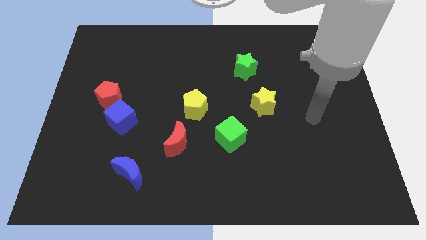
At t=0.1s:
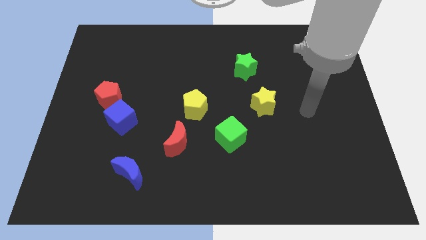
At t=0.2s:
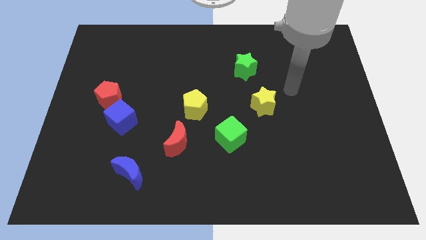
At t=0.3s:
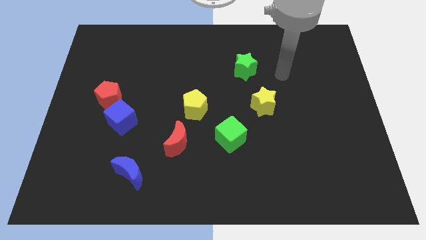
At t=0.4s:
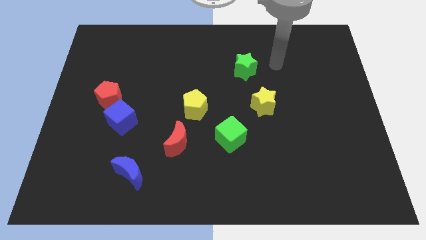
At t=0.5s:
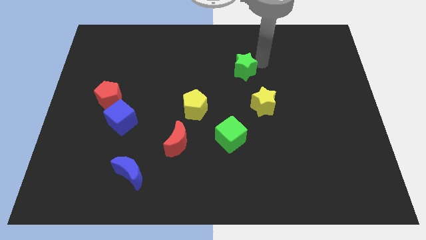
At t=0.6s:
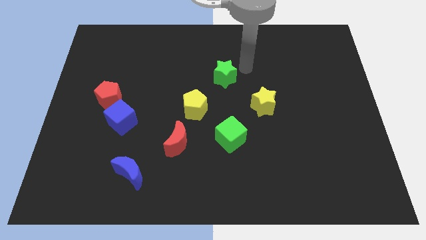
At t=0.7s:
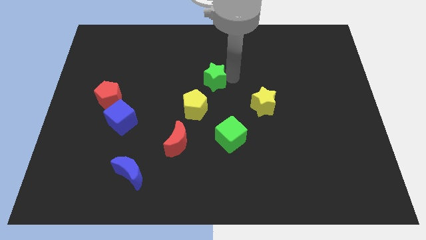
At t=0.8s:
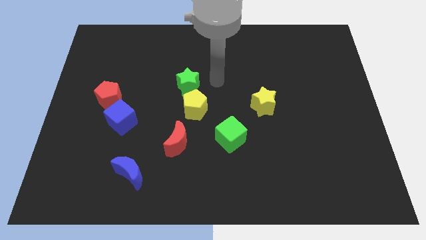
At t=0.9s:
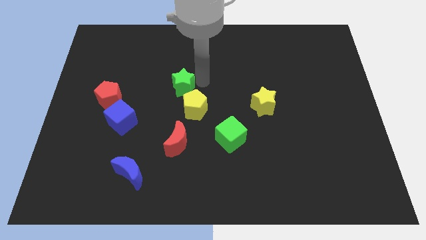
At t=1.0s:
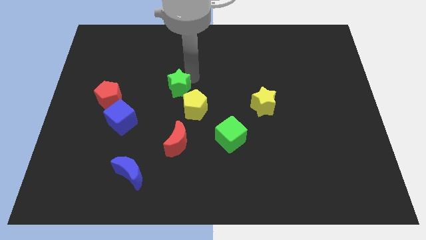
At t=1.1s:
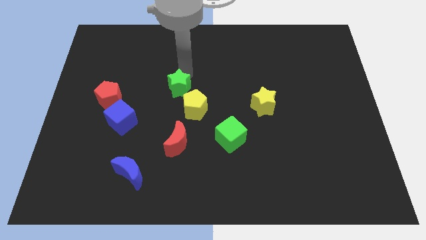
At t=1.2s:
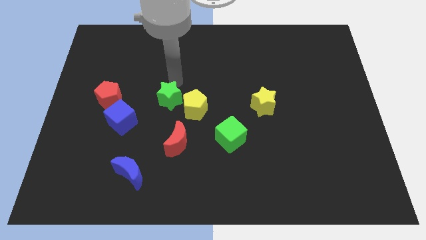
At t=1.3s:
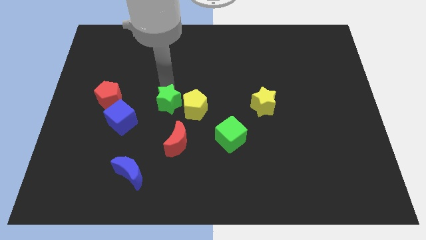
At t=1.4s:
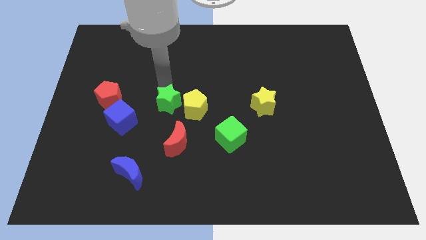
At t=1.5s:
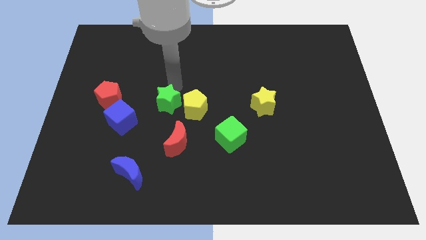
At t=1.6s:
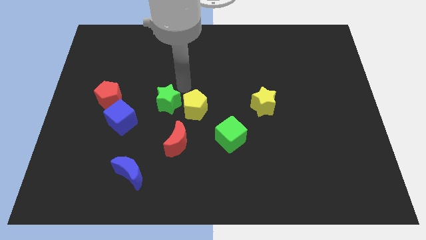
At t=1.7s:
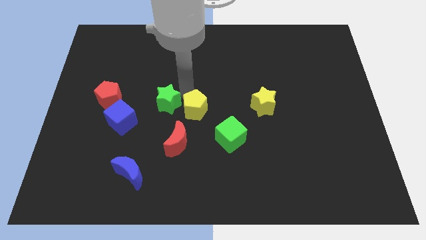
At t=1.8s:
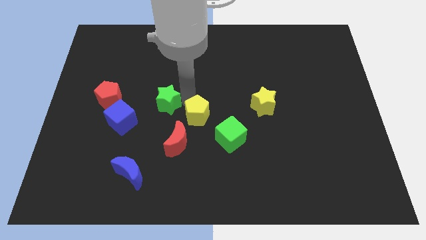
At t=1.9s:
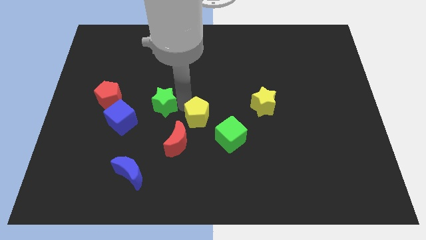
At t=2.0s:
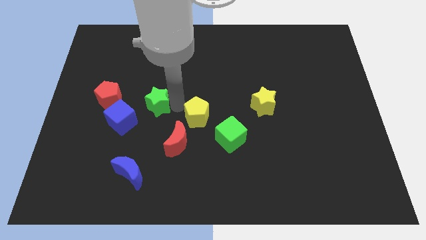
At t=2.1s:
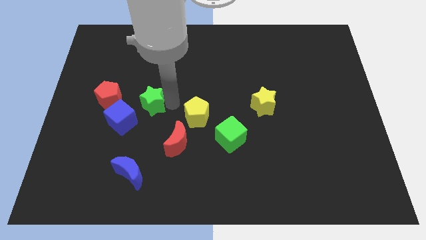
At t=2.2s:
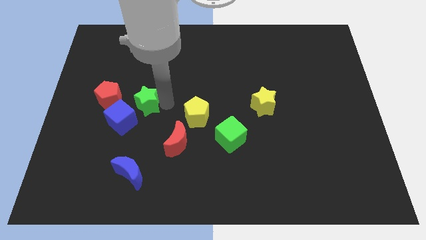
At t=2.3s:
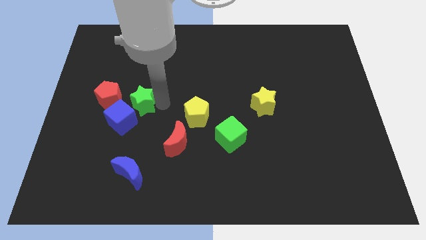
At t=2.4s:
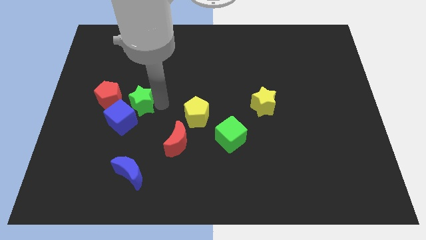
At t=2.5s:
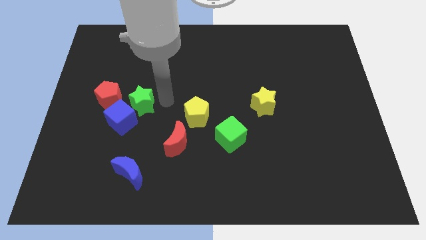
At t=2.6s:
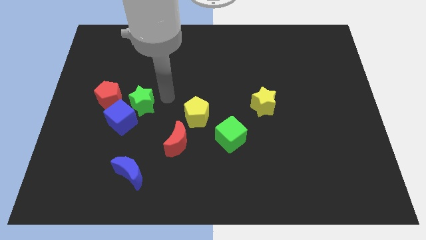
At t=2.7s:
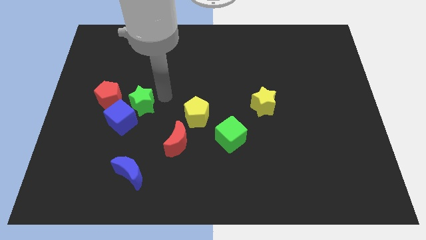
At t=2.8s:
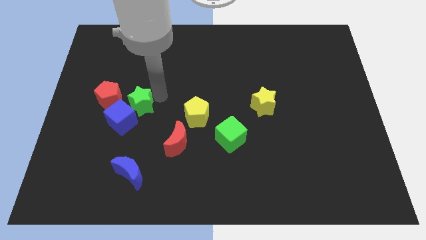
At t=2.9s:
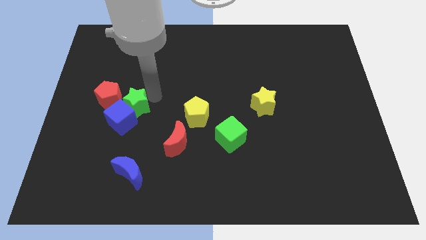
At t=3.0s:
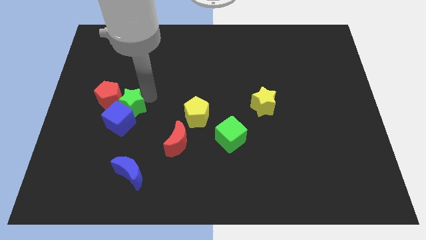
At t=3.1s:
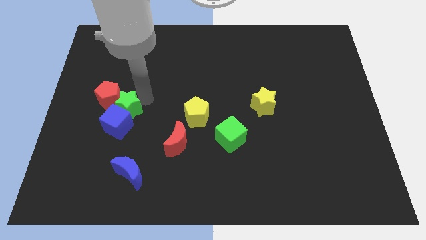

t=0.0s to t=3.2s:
move the green star close to the blue cube

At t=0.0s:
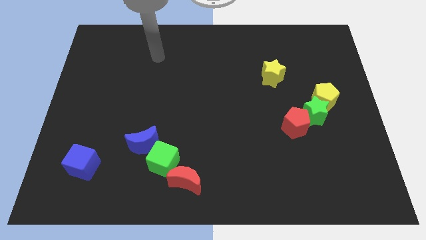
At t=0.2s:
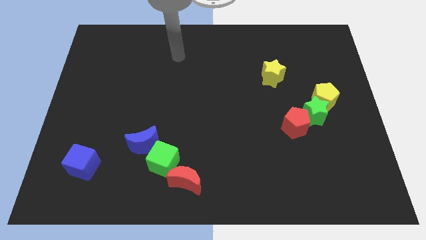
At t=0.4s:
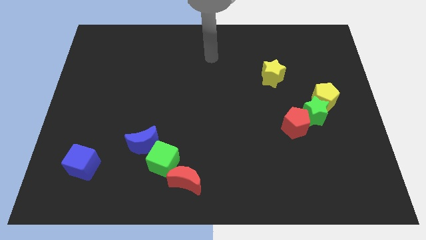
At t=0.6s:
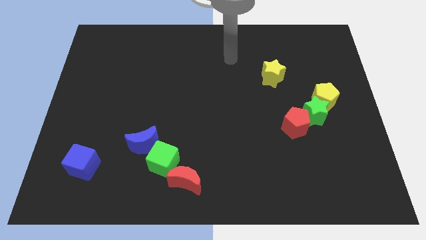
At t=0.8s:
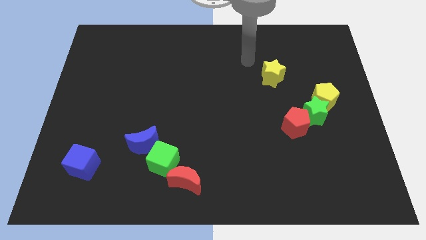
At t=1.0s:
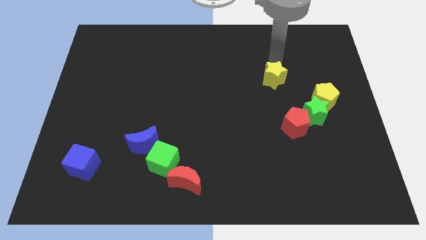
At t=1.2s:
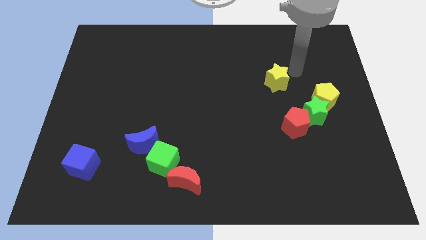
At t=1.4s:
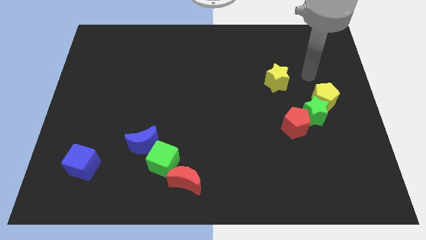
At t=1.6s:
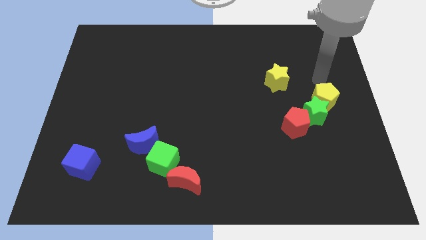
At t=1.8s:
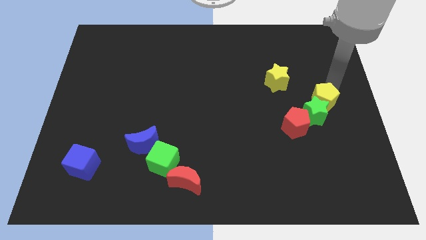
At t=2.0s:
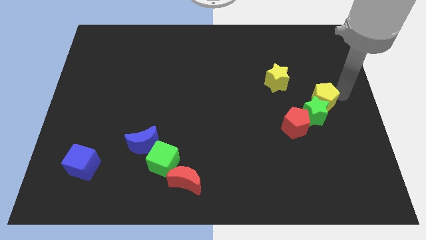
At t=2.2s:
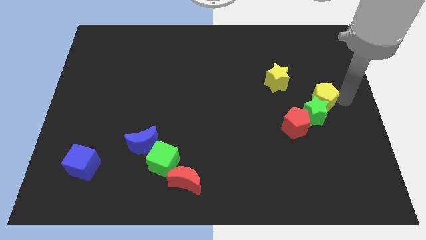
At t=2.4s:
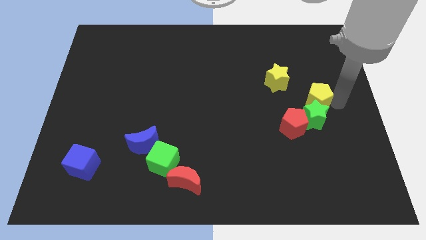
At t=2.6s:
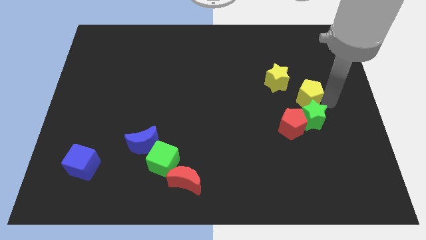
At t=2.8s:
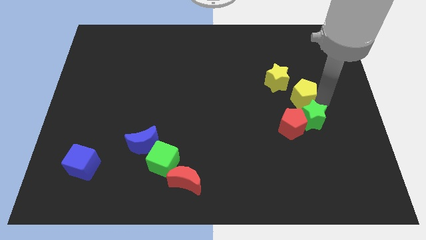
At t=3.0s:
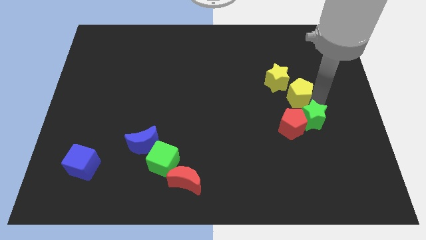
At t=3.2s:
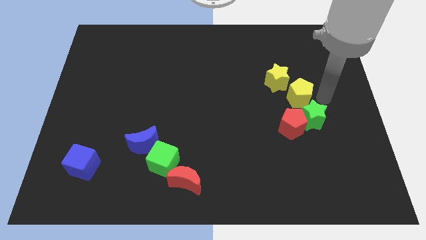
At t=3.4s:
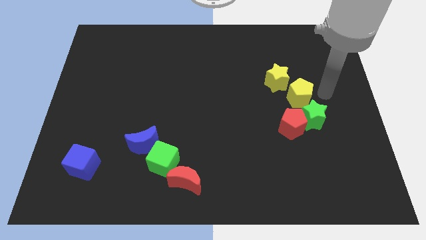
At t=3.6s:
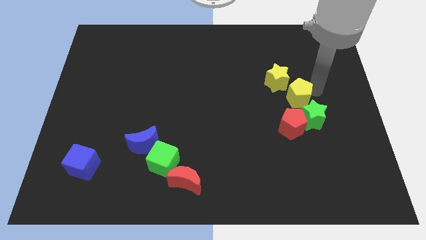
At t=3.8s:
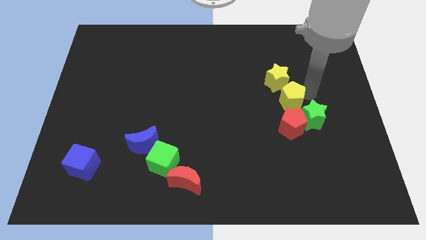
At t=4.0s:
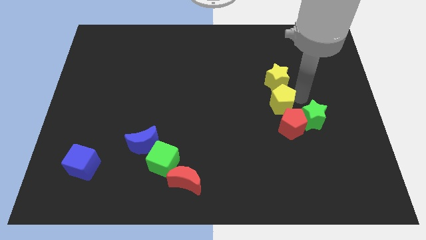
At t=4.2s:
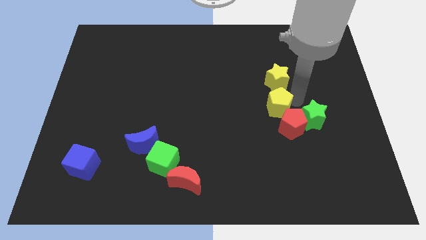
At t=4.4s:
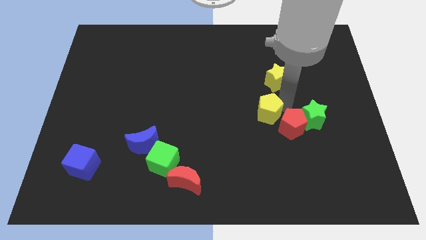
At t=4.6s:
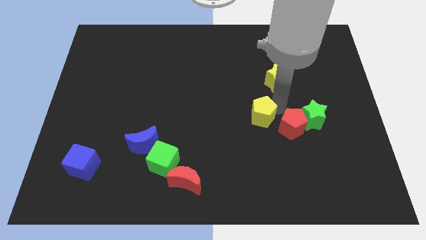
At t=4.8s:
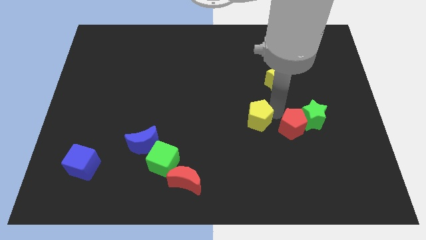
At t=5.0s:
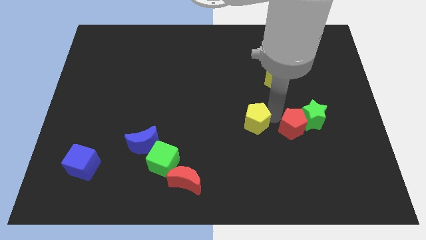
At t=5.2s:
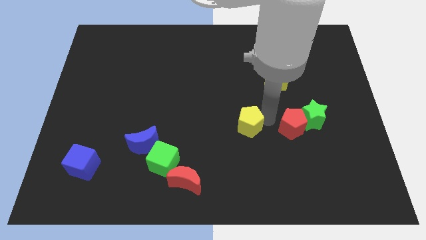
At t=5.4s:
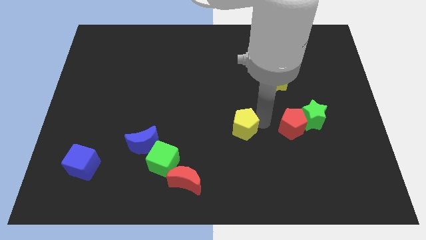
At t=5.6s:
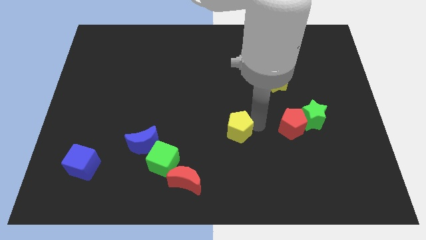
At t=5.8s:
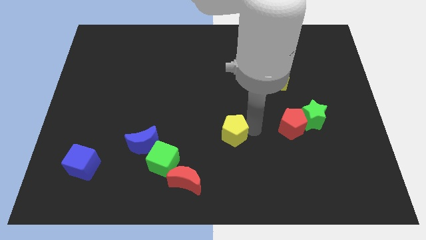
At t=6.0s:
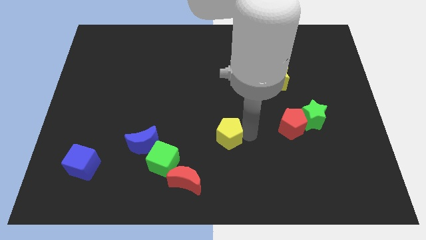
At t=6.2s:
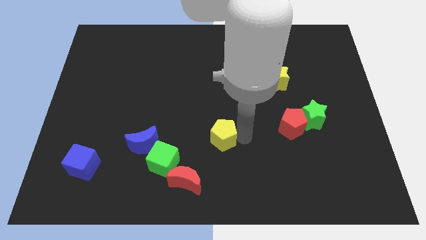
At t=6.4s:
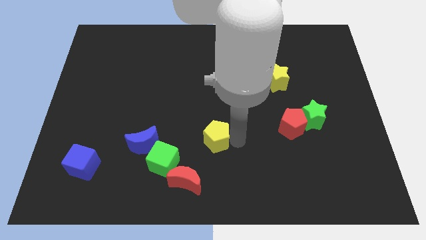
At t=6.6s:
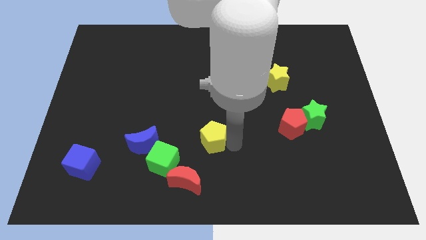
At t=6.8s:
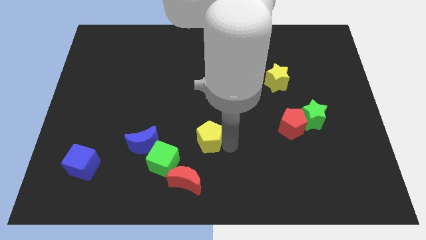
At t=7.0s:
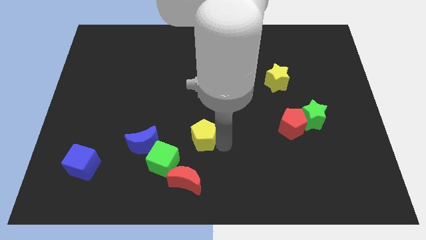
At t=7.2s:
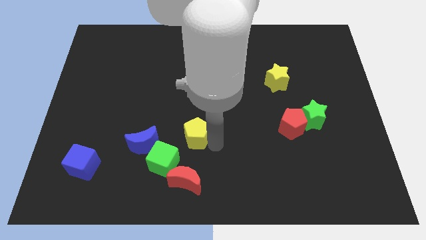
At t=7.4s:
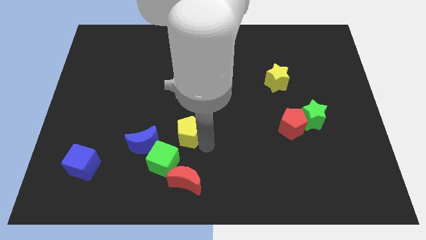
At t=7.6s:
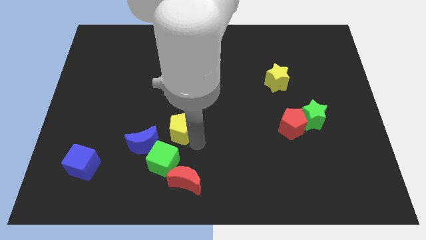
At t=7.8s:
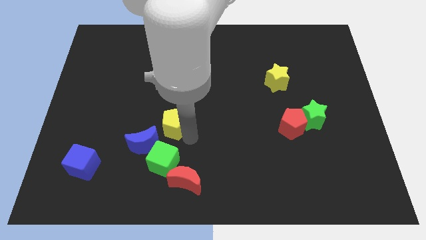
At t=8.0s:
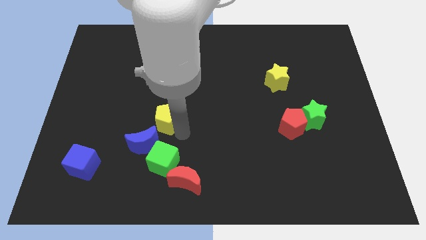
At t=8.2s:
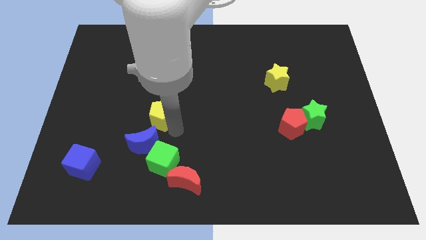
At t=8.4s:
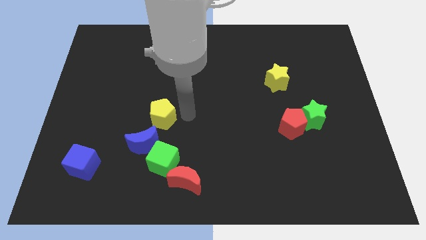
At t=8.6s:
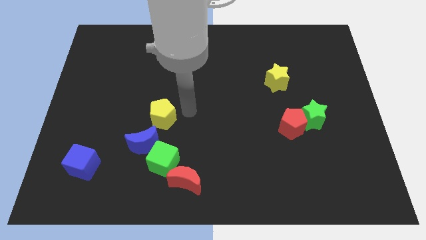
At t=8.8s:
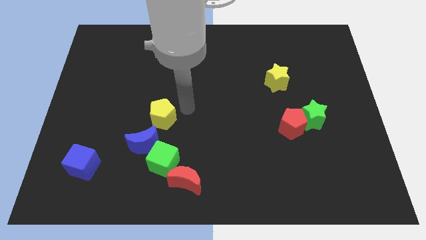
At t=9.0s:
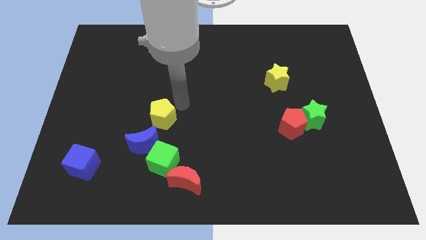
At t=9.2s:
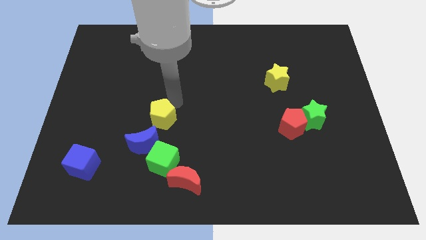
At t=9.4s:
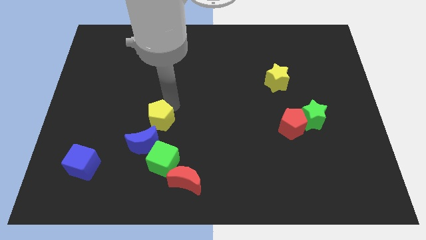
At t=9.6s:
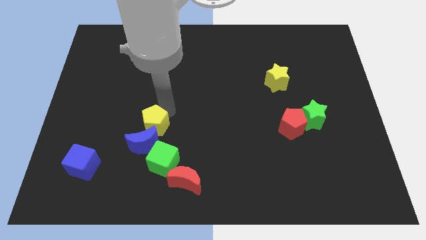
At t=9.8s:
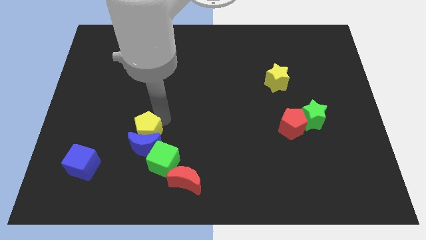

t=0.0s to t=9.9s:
move the yellow pentagon towards the blue moon
